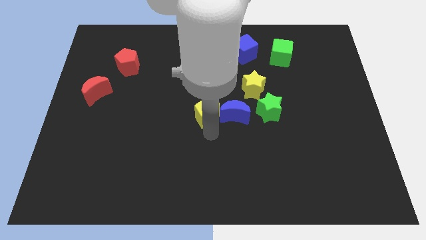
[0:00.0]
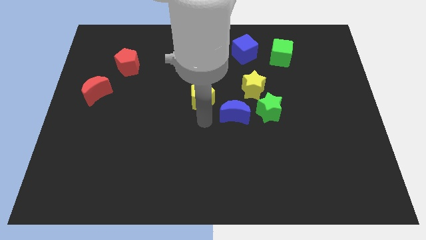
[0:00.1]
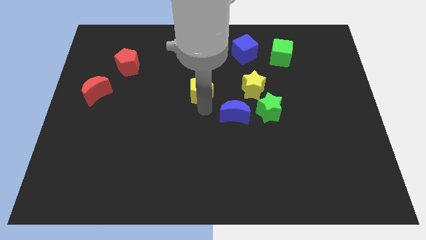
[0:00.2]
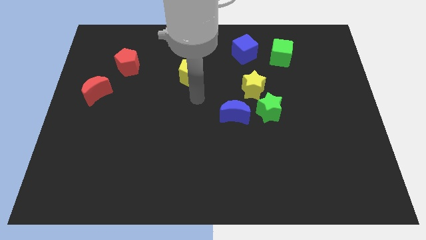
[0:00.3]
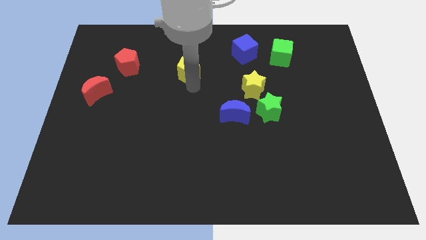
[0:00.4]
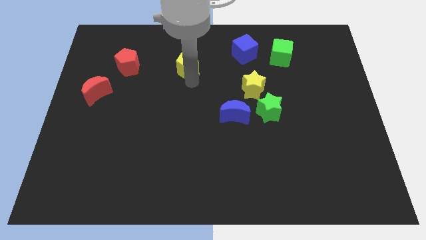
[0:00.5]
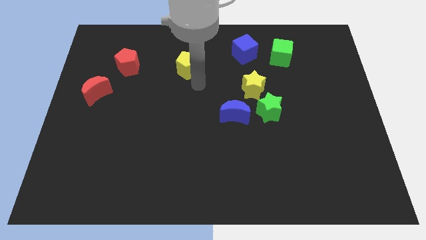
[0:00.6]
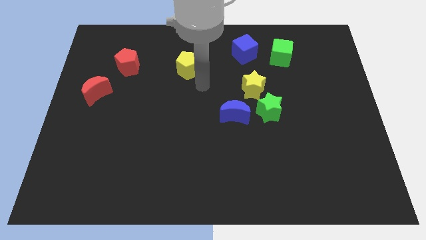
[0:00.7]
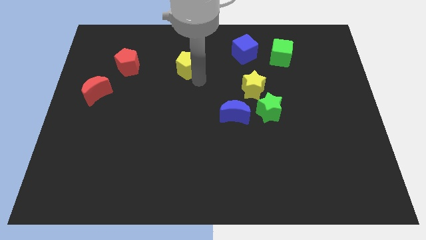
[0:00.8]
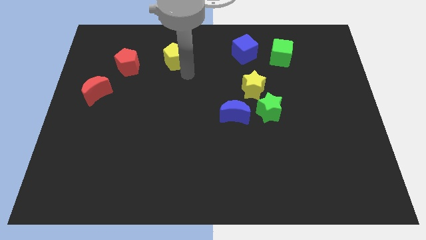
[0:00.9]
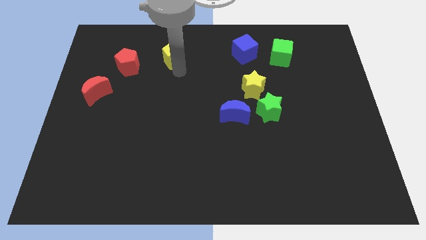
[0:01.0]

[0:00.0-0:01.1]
move the yellow pentagon right to the red pentagon

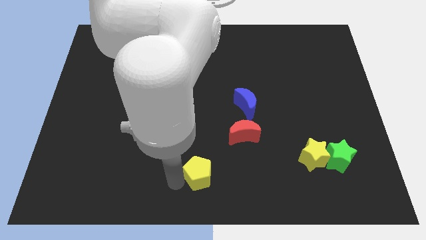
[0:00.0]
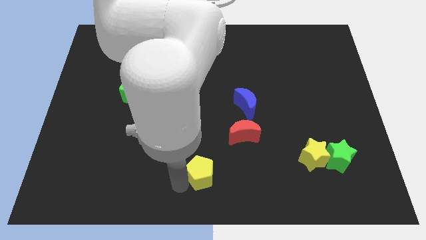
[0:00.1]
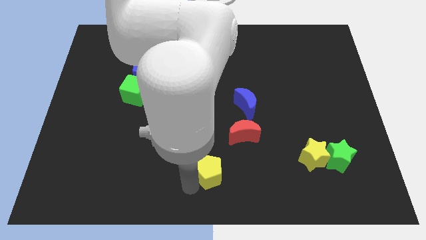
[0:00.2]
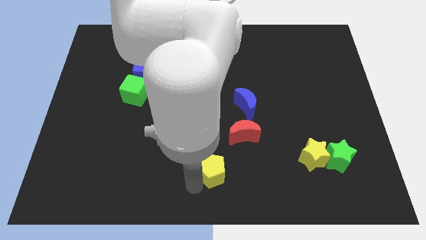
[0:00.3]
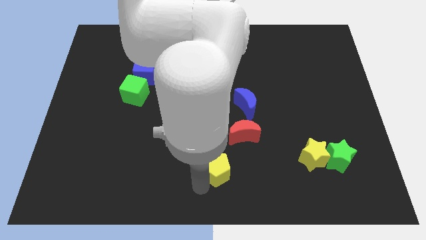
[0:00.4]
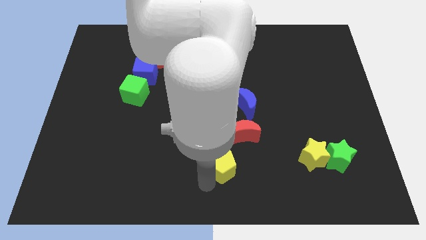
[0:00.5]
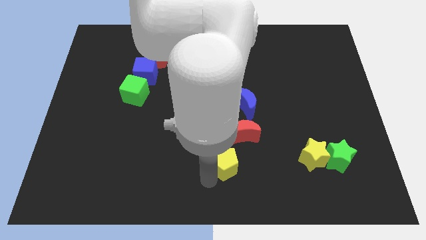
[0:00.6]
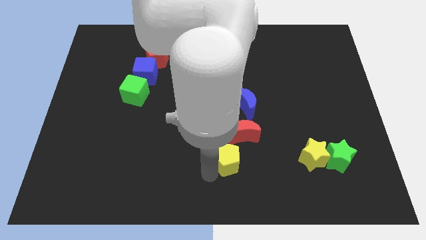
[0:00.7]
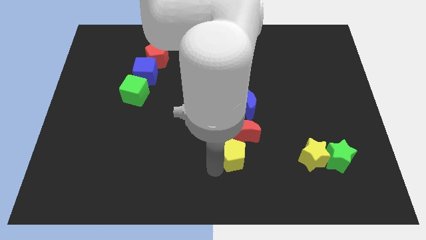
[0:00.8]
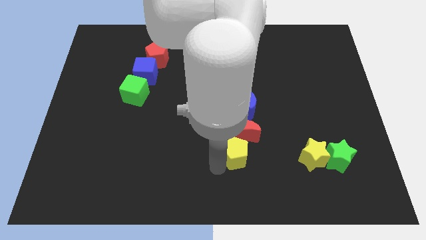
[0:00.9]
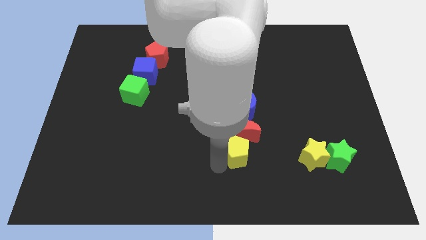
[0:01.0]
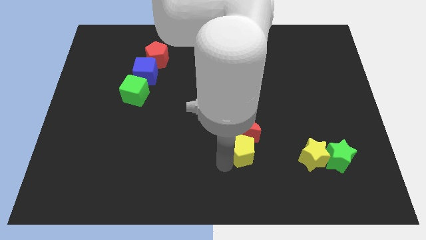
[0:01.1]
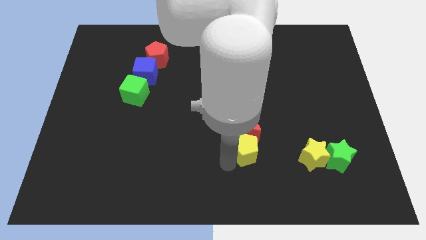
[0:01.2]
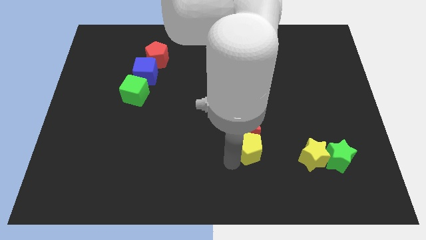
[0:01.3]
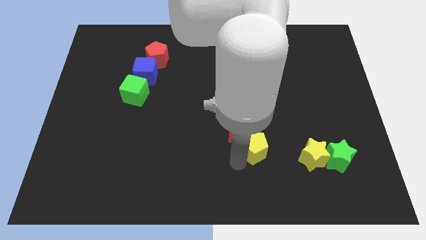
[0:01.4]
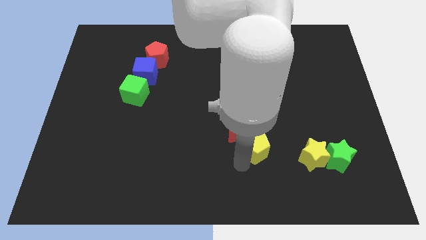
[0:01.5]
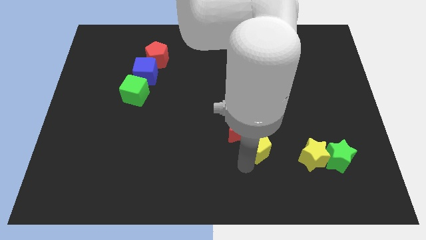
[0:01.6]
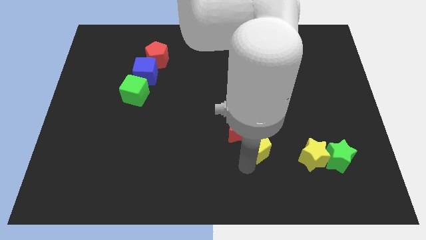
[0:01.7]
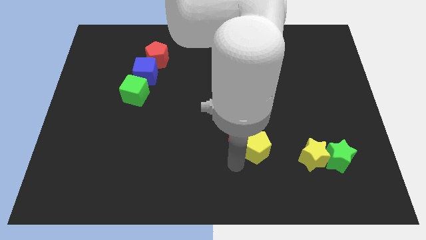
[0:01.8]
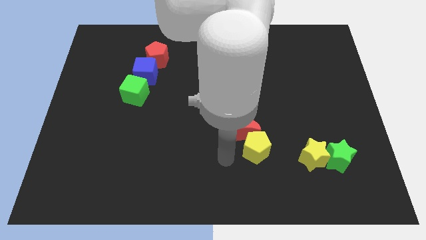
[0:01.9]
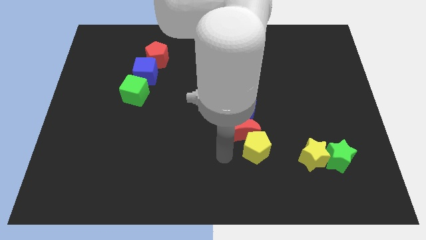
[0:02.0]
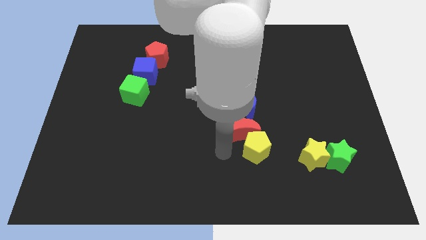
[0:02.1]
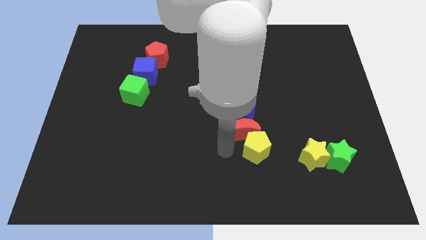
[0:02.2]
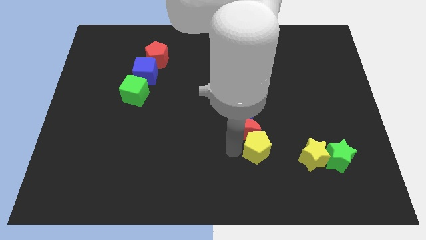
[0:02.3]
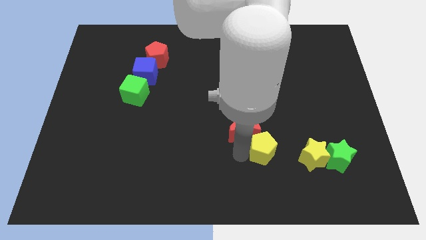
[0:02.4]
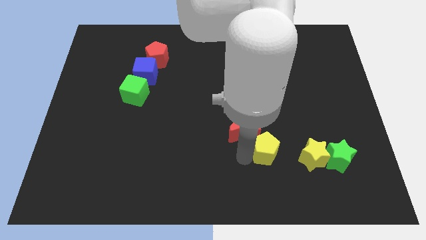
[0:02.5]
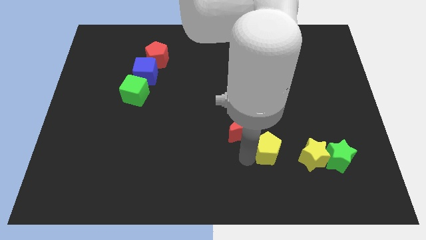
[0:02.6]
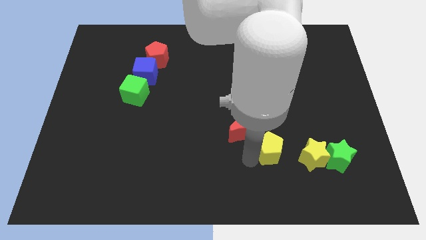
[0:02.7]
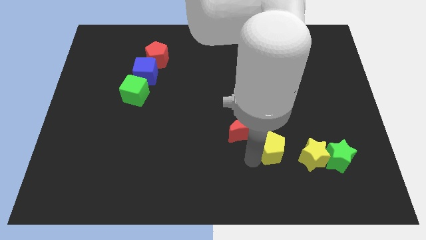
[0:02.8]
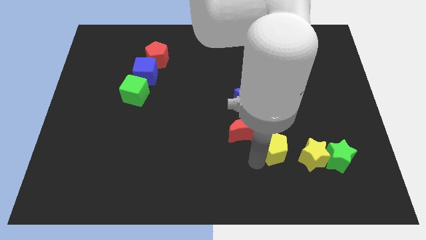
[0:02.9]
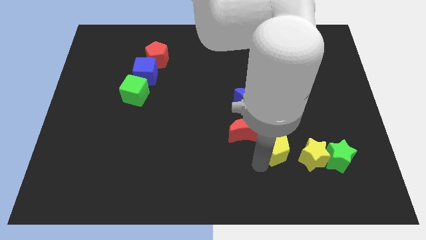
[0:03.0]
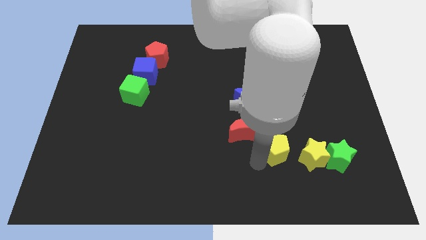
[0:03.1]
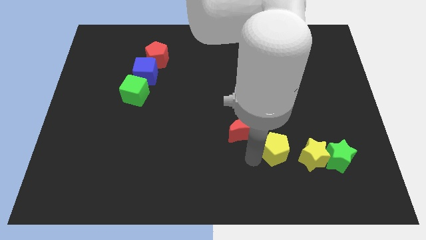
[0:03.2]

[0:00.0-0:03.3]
move yellow pentagon diagonally in between red moon and yellow star

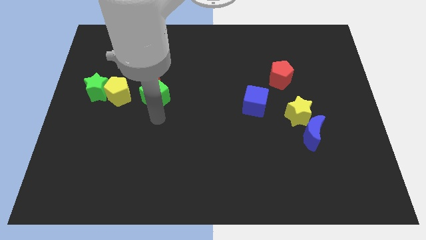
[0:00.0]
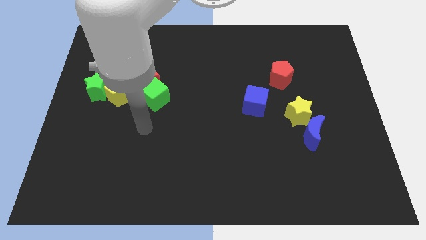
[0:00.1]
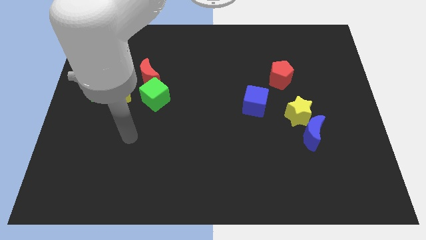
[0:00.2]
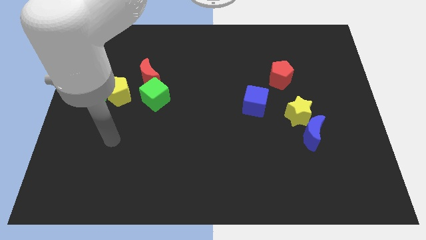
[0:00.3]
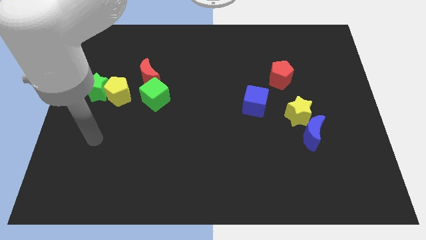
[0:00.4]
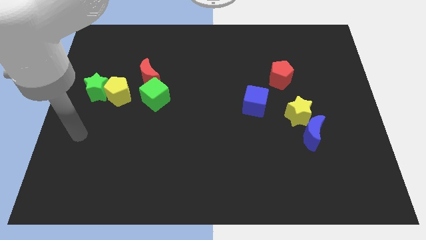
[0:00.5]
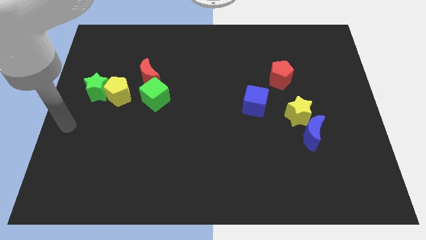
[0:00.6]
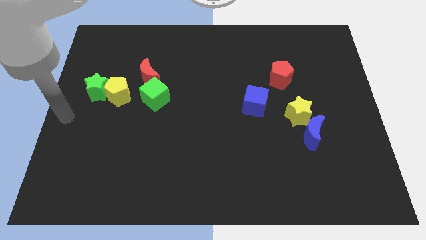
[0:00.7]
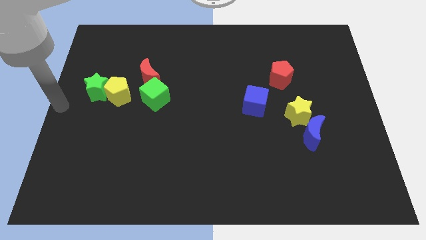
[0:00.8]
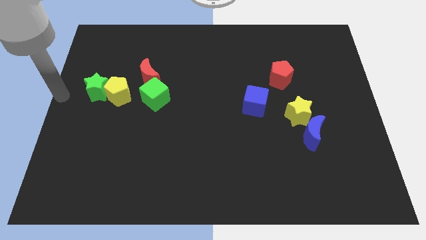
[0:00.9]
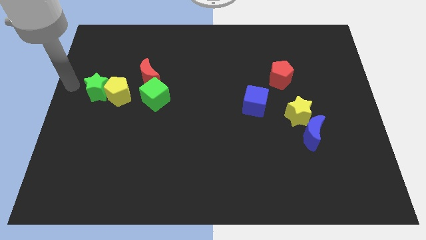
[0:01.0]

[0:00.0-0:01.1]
move your arm to the left side of the green star

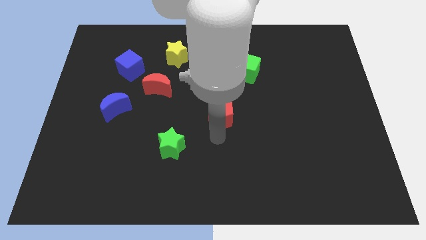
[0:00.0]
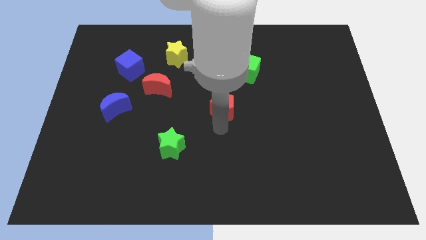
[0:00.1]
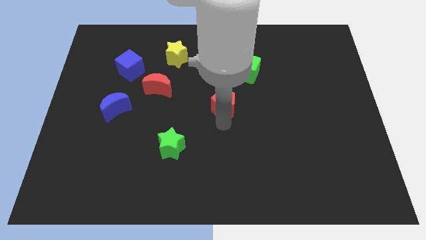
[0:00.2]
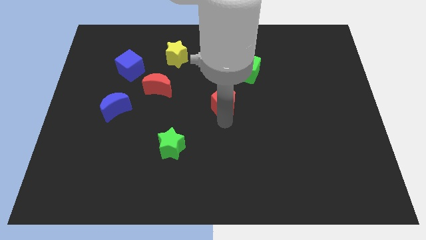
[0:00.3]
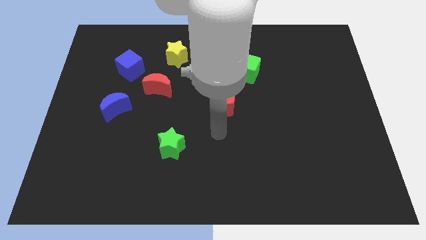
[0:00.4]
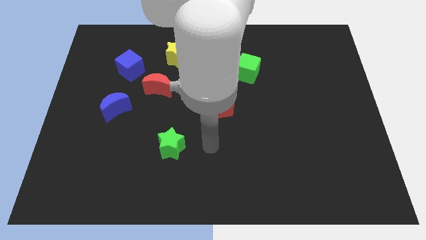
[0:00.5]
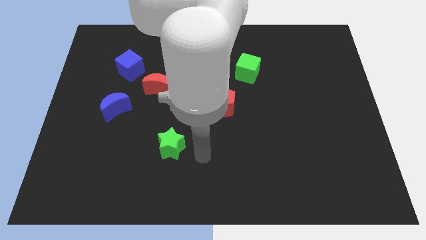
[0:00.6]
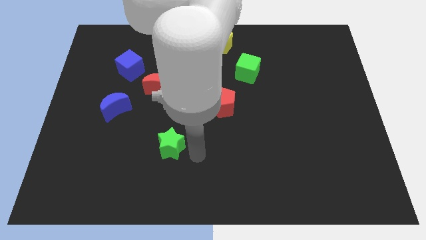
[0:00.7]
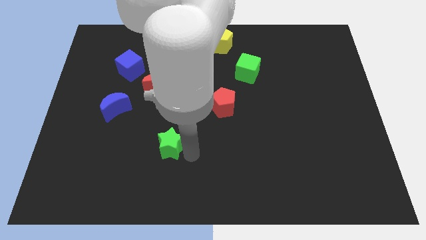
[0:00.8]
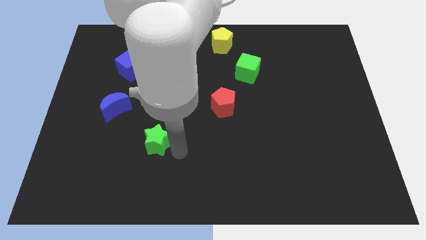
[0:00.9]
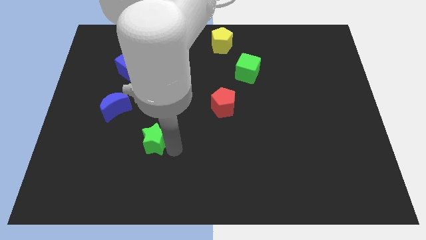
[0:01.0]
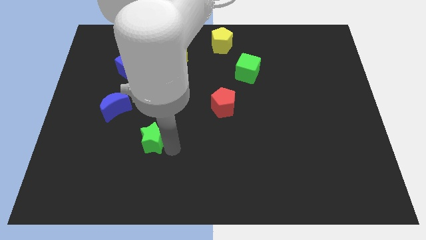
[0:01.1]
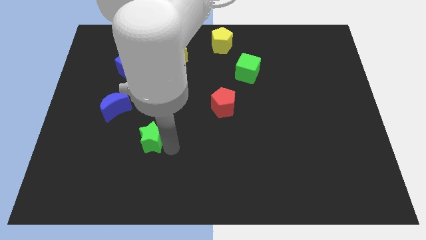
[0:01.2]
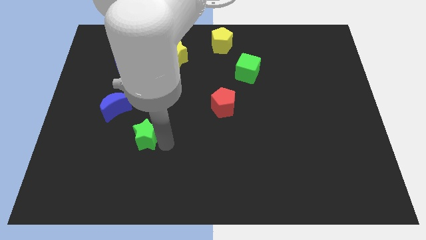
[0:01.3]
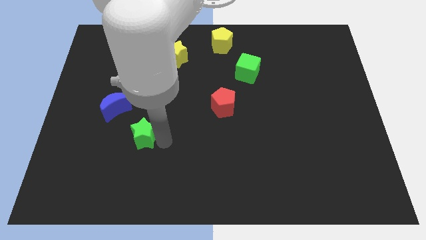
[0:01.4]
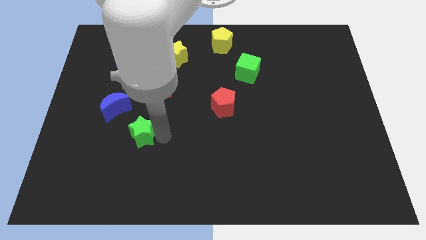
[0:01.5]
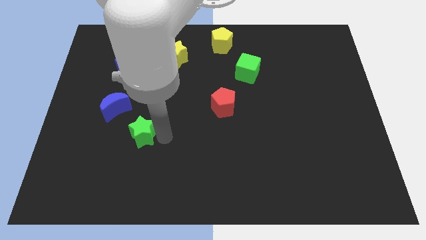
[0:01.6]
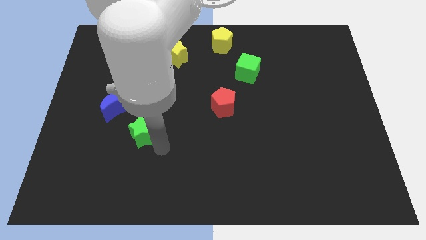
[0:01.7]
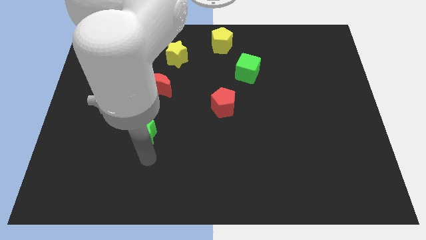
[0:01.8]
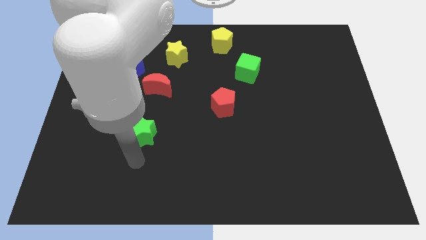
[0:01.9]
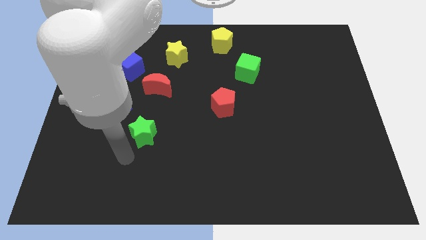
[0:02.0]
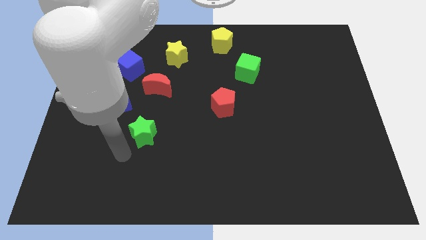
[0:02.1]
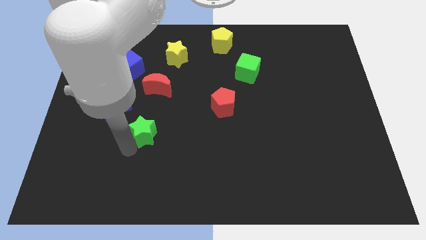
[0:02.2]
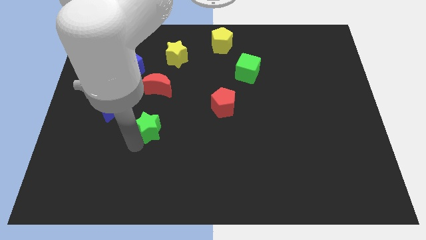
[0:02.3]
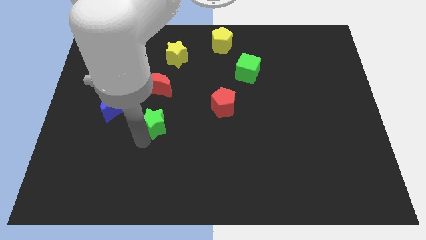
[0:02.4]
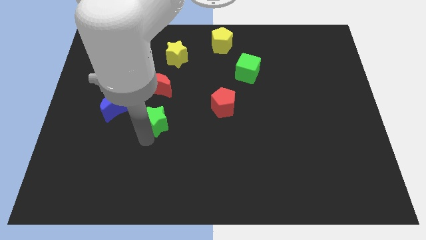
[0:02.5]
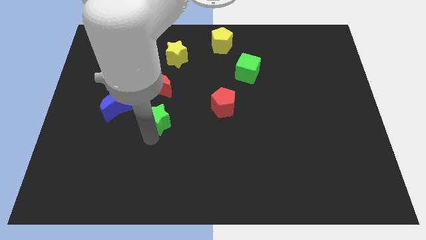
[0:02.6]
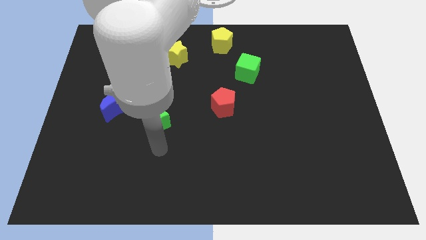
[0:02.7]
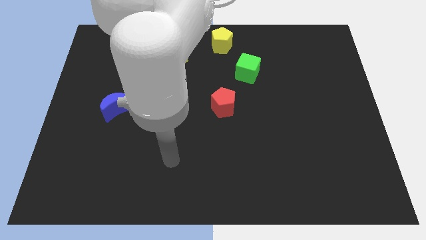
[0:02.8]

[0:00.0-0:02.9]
place green star to the bottom of red crescent

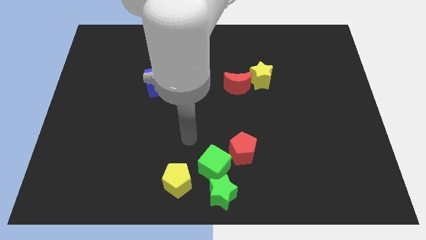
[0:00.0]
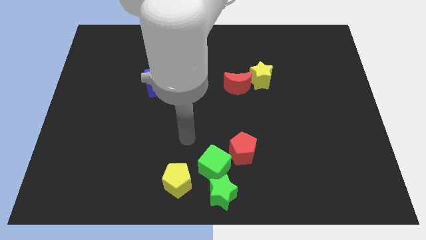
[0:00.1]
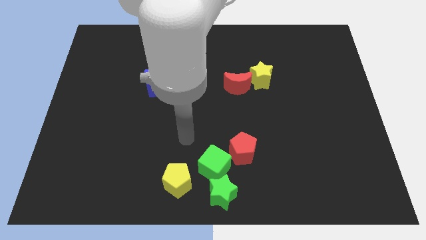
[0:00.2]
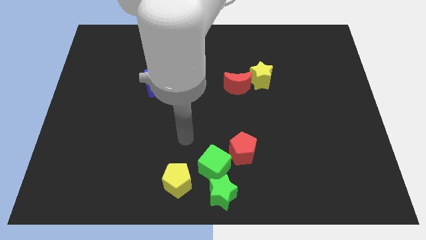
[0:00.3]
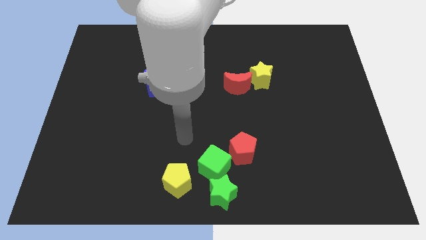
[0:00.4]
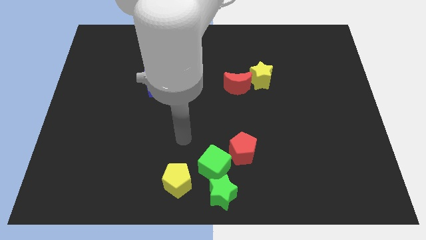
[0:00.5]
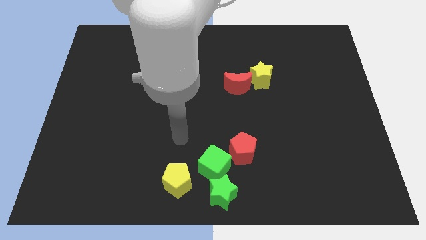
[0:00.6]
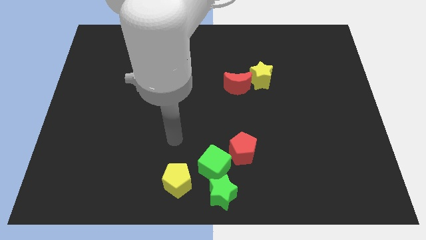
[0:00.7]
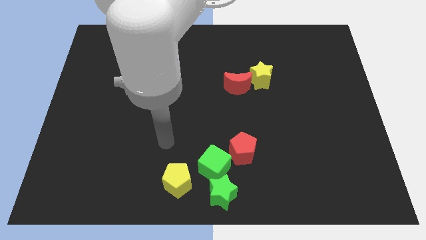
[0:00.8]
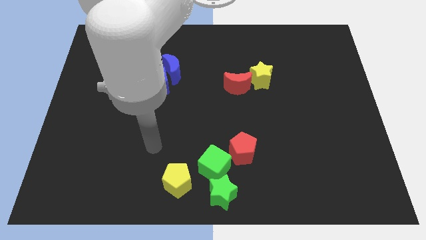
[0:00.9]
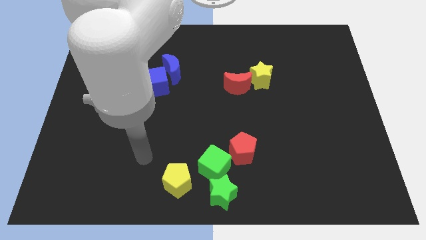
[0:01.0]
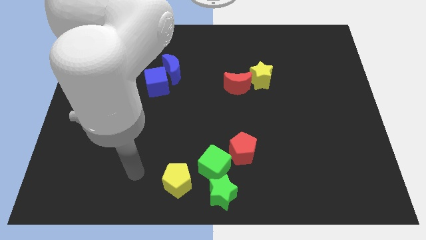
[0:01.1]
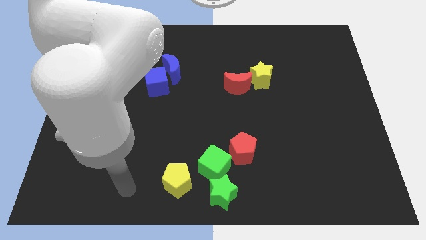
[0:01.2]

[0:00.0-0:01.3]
point your arm at the left of the yellow pentagon
